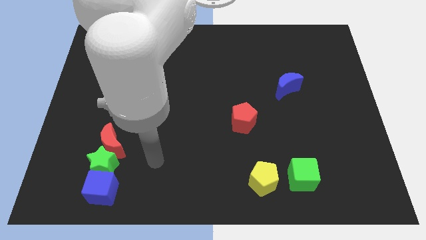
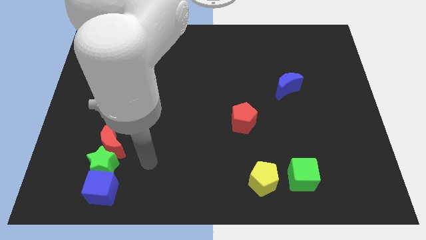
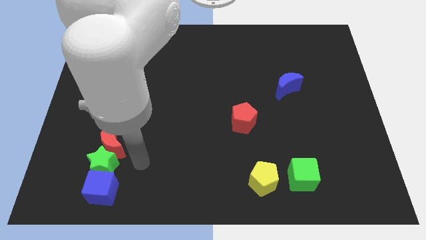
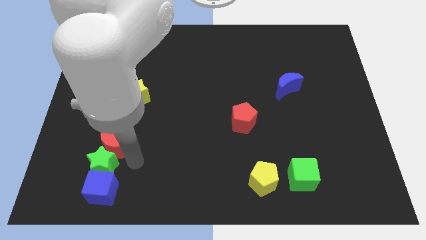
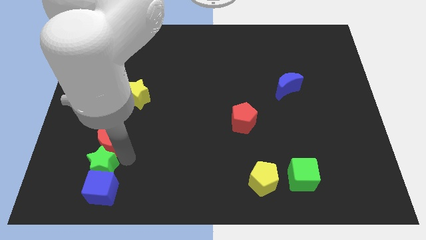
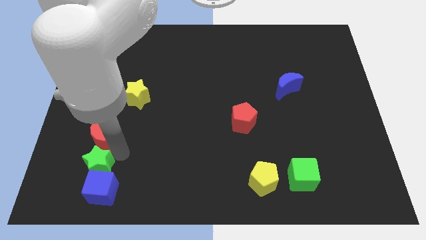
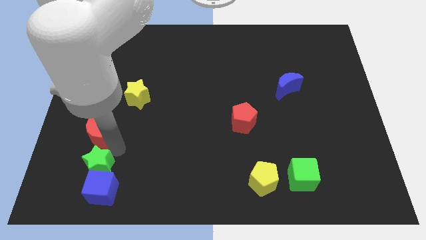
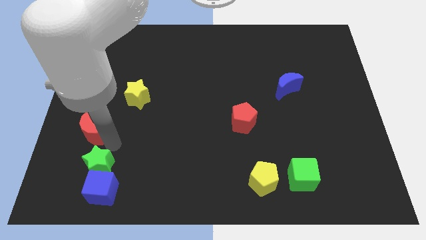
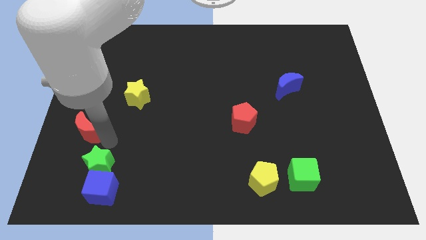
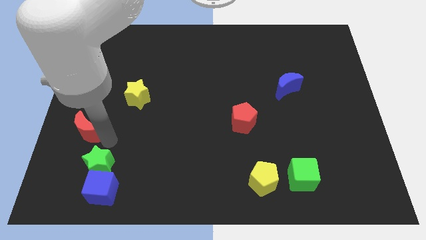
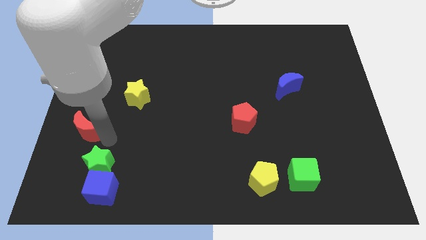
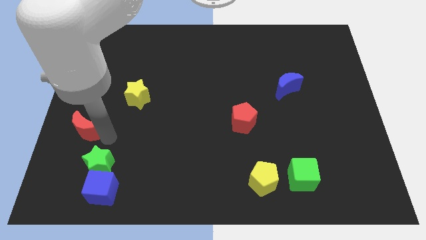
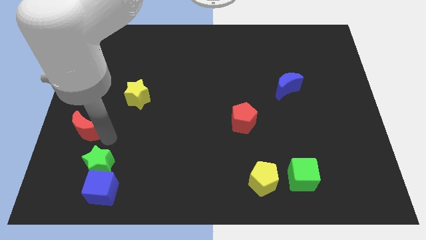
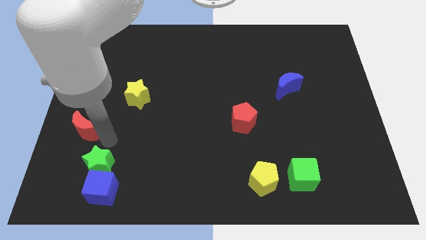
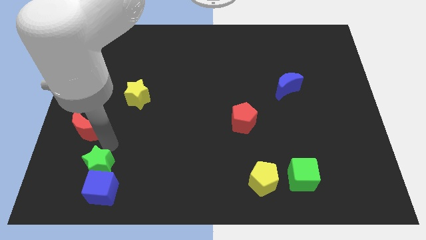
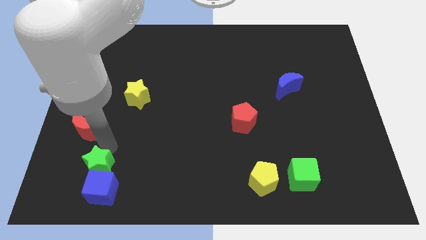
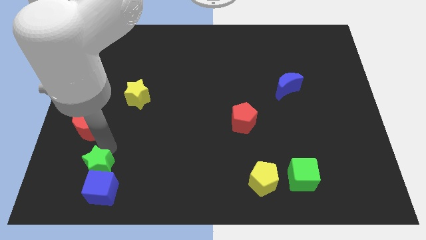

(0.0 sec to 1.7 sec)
separate red moon from the green star

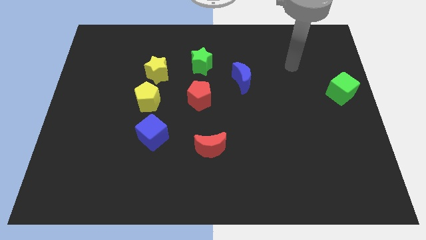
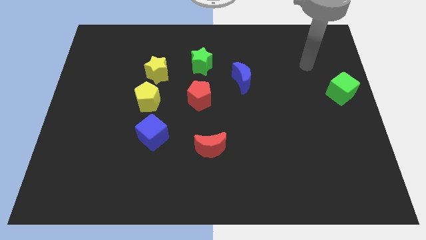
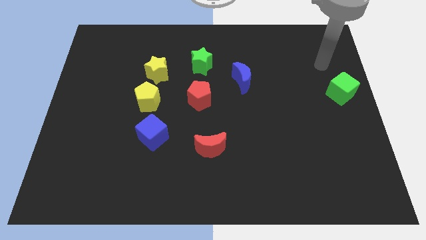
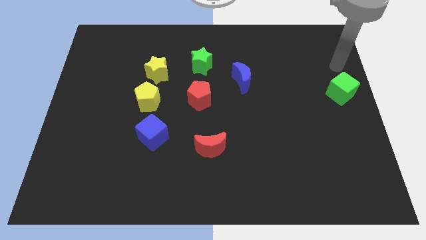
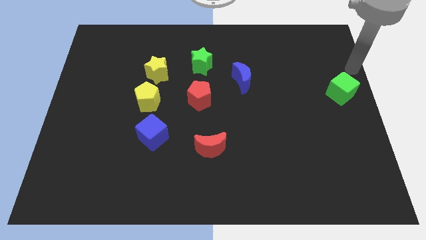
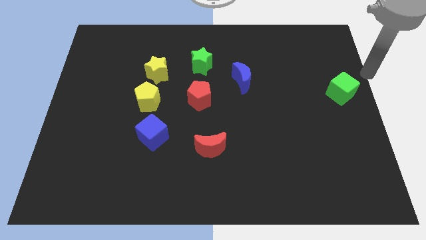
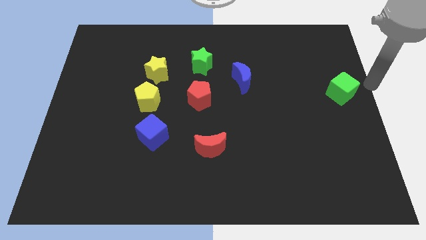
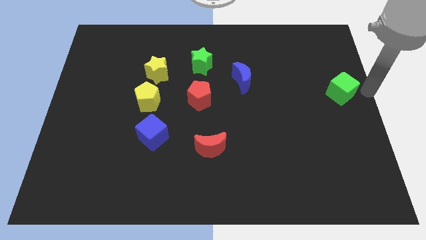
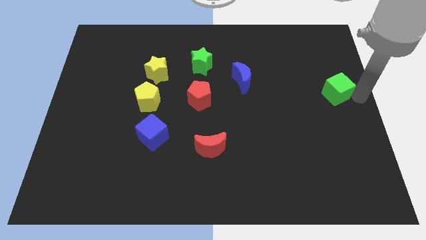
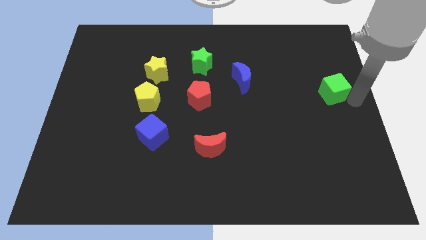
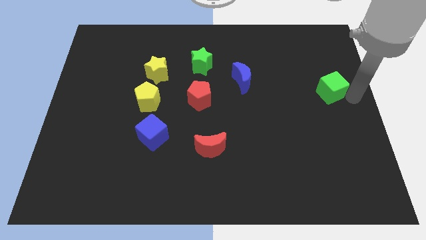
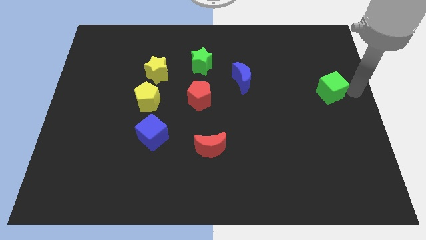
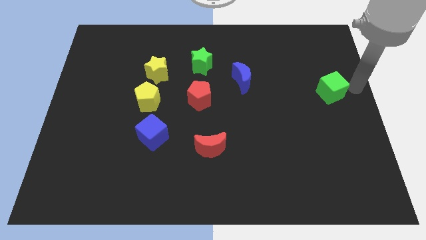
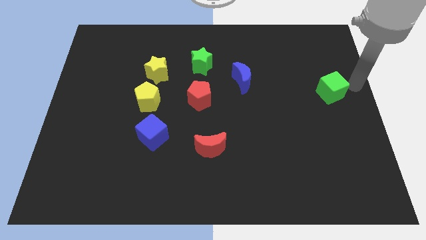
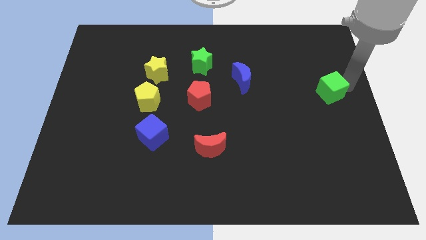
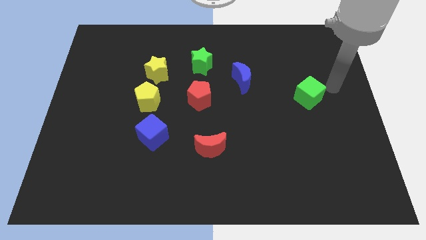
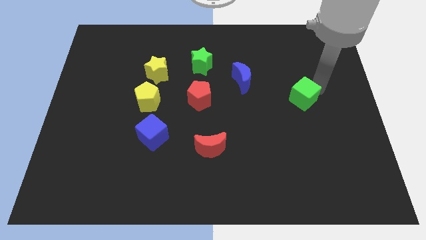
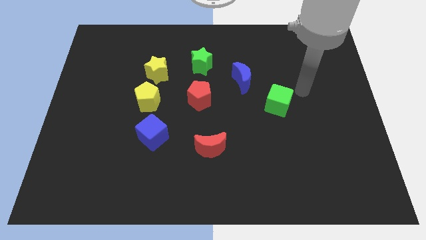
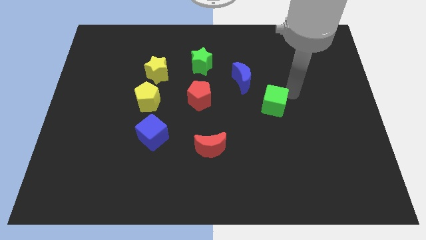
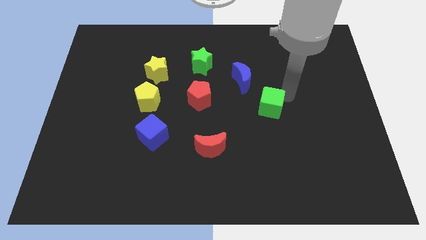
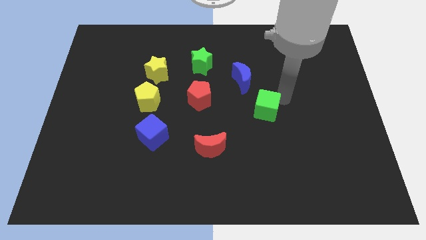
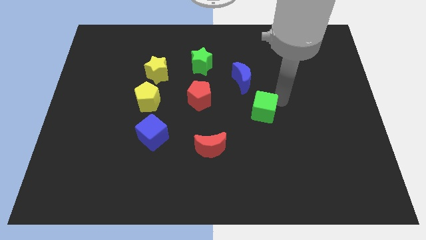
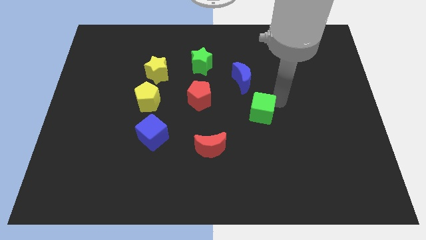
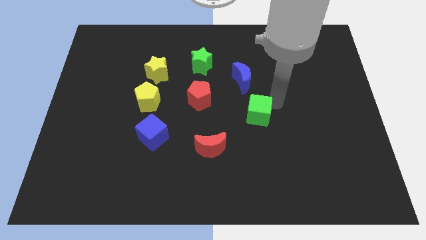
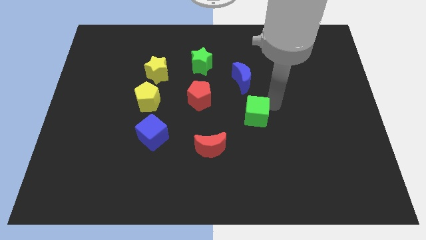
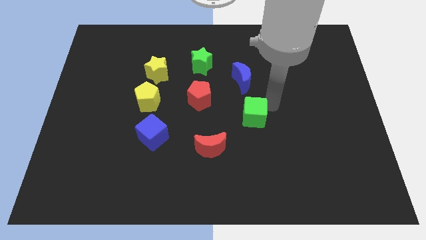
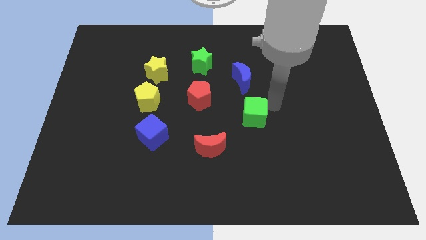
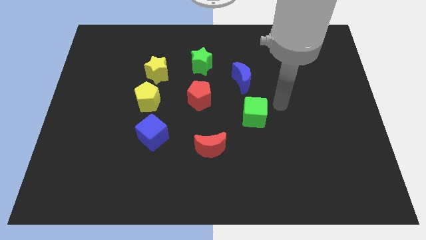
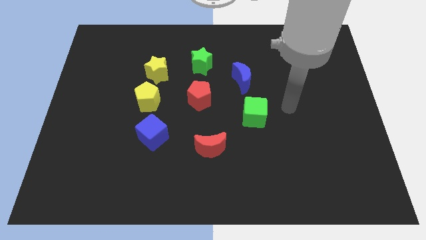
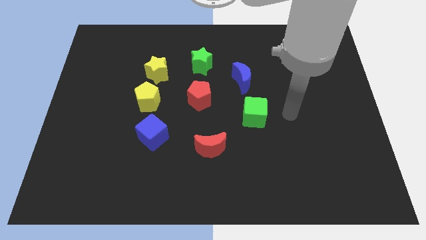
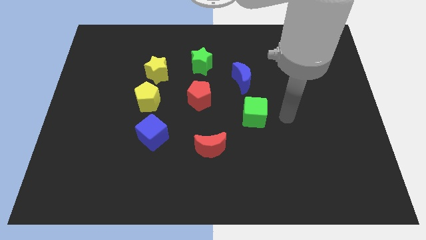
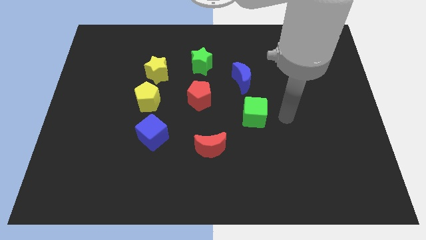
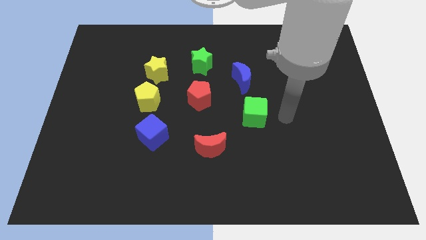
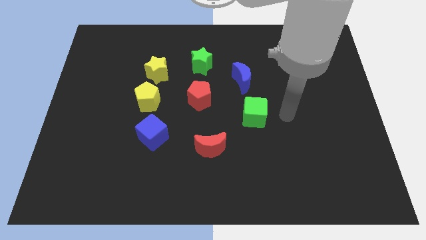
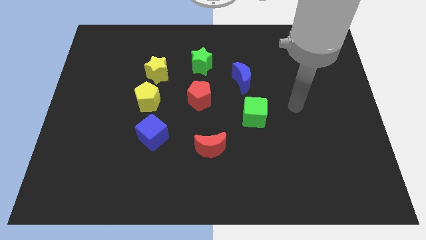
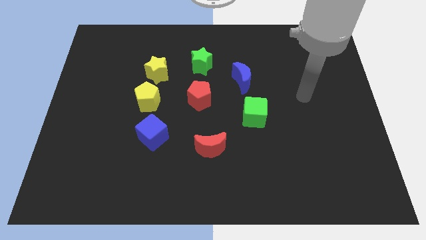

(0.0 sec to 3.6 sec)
place the green cube below the blue crescent

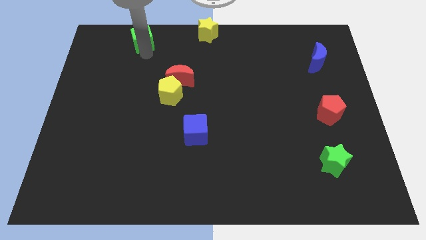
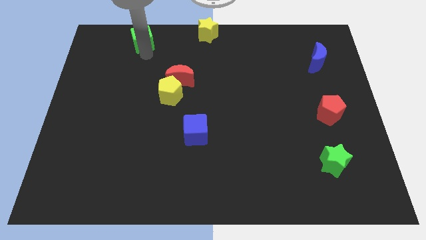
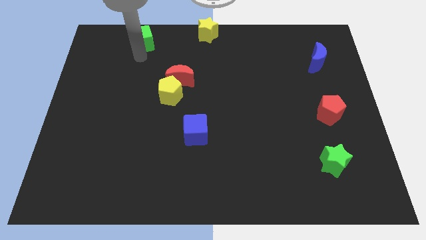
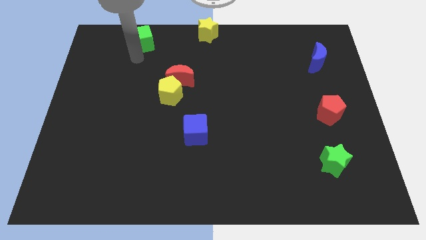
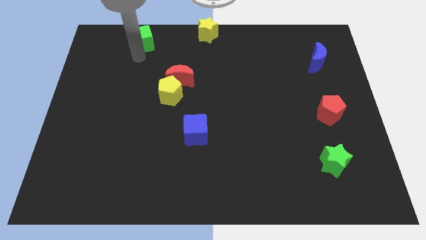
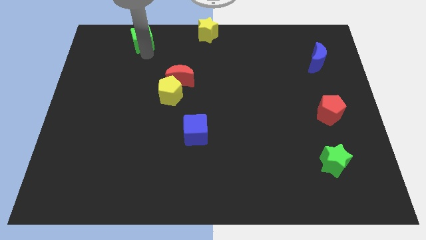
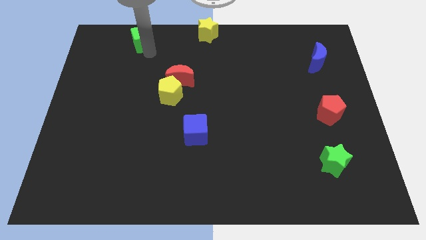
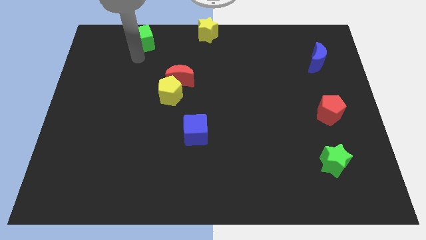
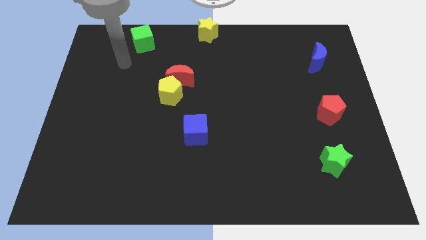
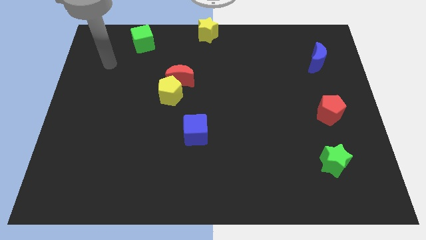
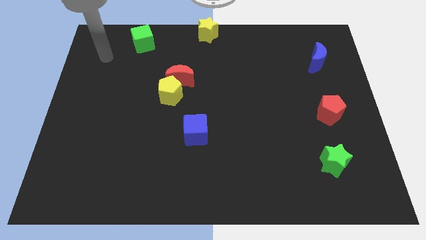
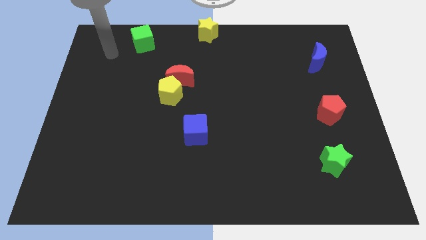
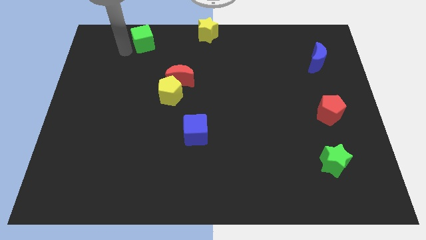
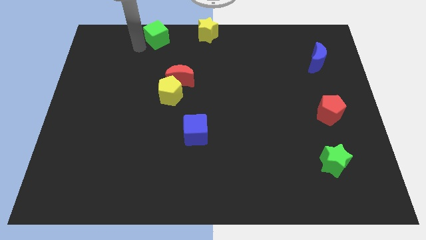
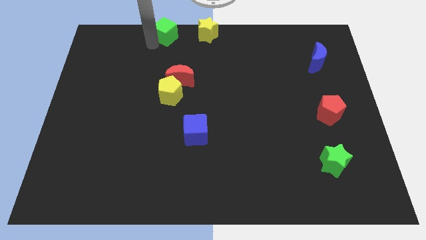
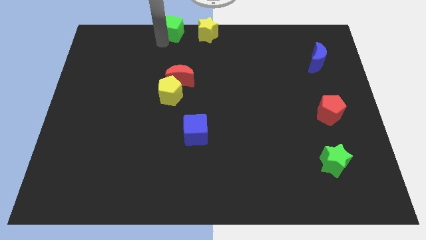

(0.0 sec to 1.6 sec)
put the green cube left to the yellow star

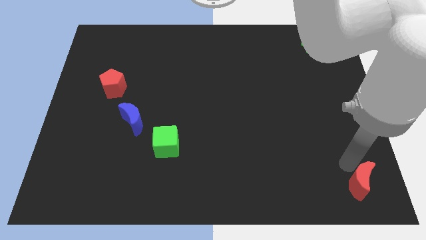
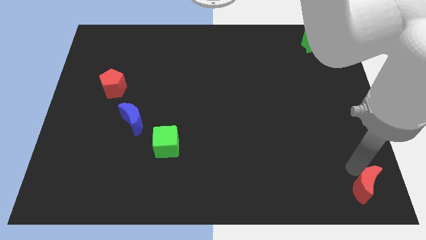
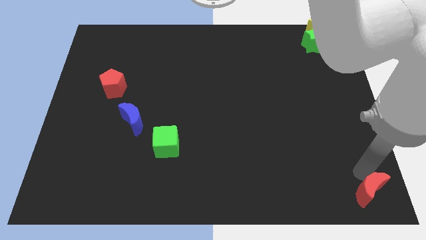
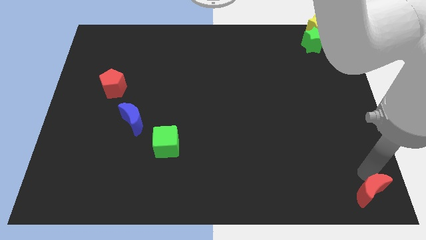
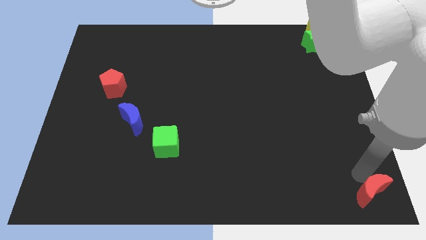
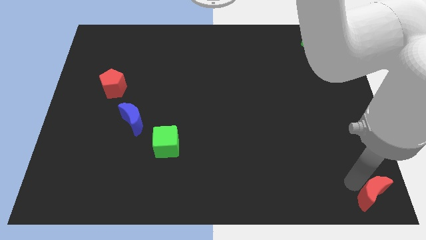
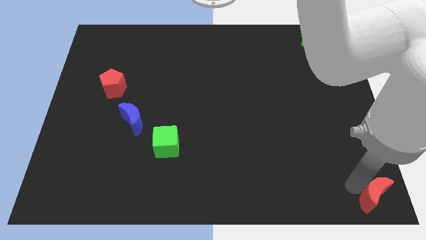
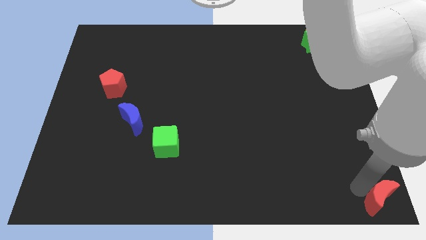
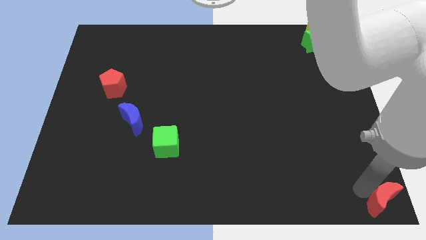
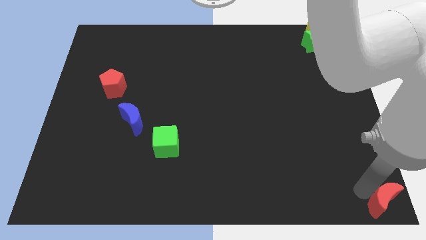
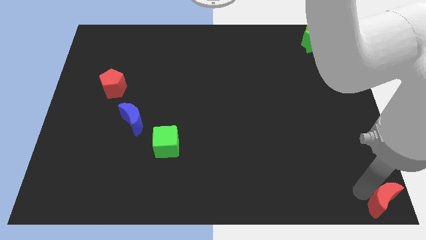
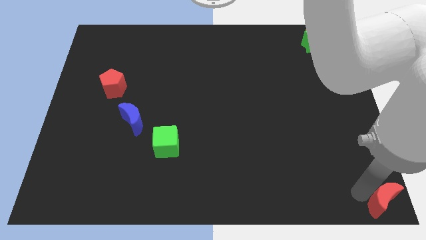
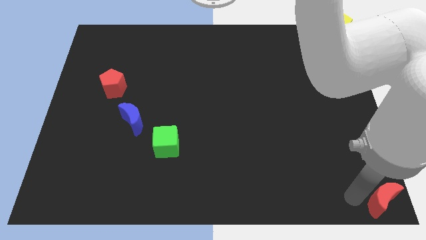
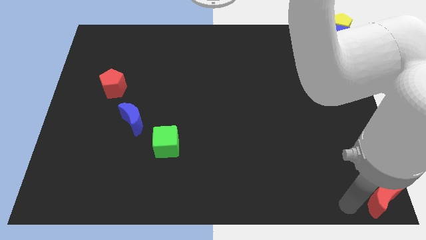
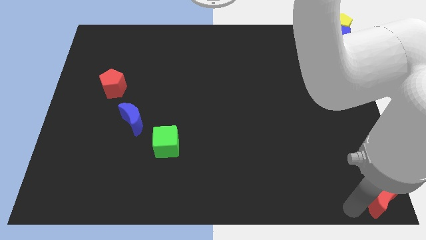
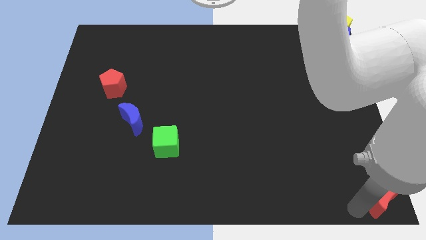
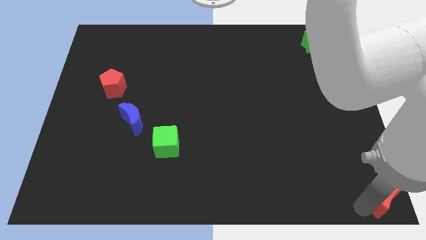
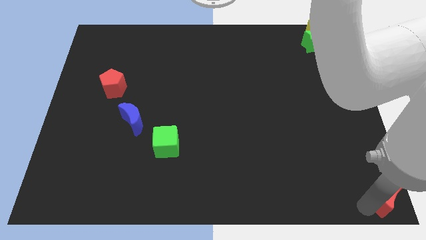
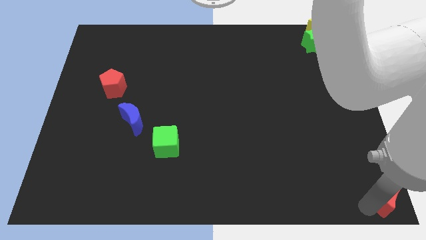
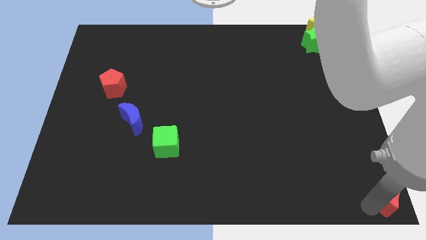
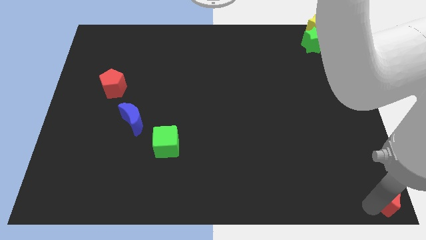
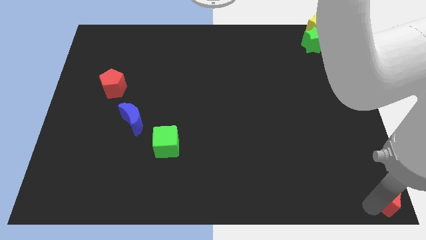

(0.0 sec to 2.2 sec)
place the red moon at the bottom right corner of the board
